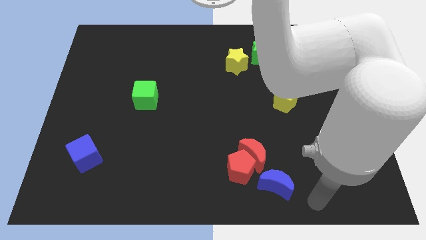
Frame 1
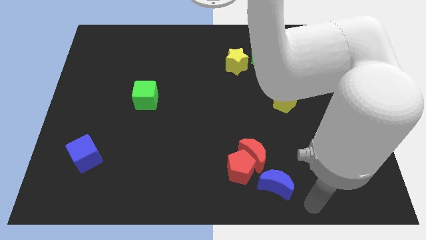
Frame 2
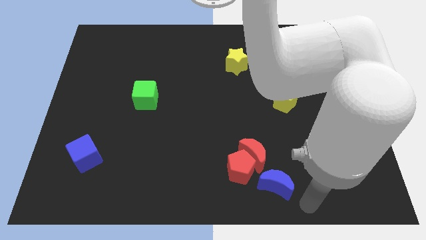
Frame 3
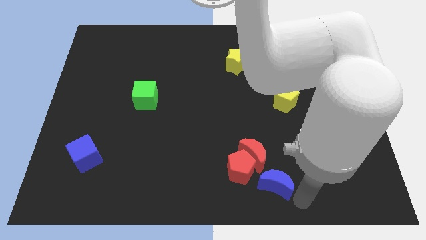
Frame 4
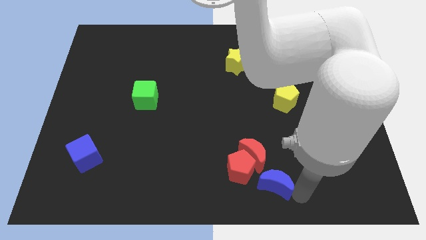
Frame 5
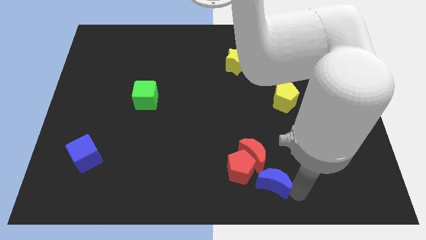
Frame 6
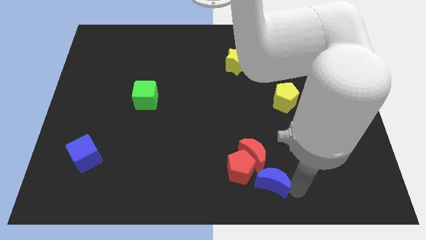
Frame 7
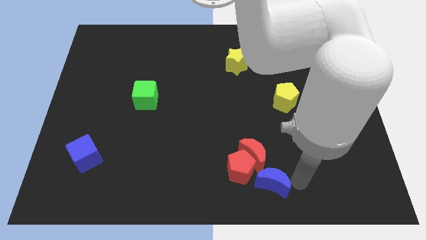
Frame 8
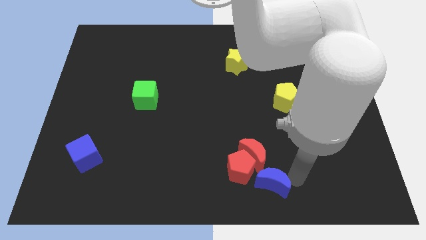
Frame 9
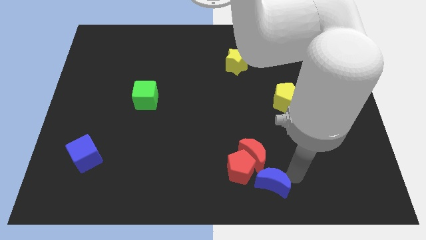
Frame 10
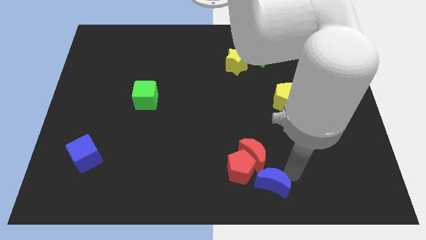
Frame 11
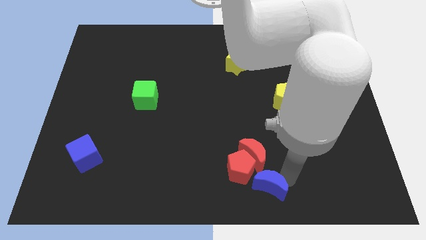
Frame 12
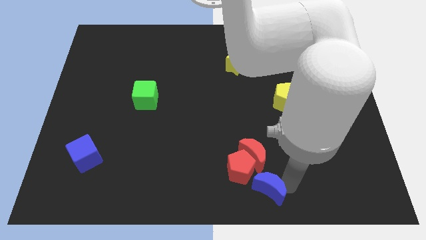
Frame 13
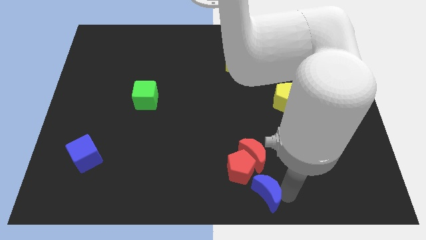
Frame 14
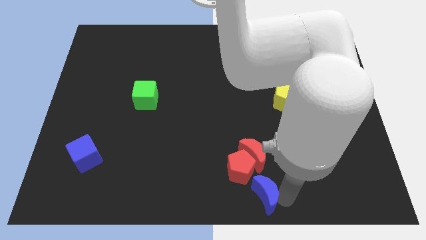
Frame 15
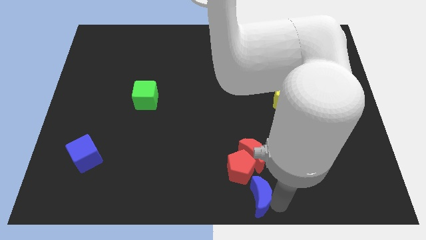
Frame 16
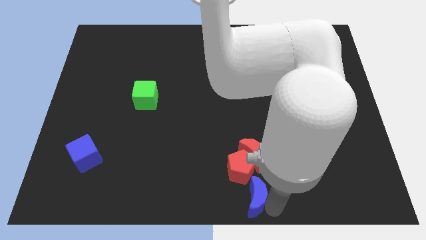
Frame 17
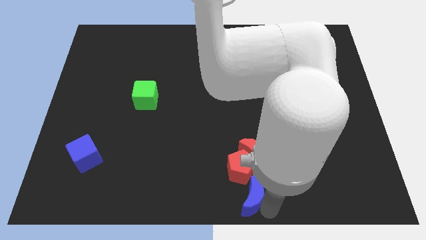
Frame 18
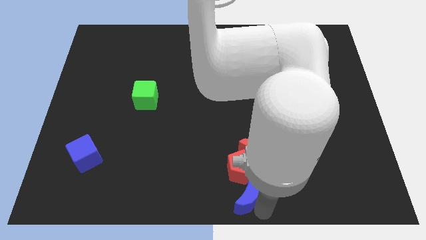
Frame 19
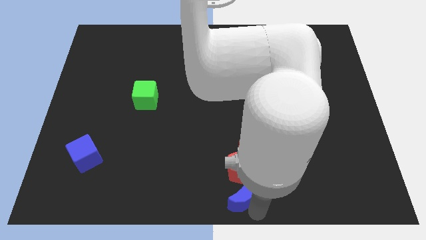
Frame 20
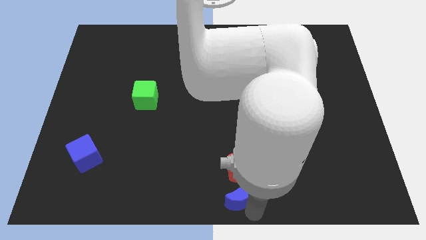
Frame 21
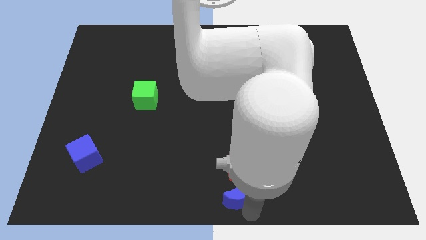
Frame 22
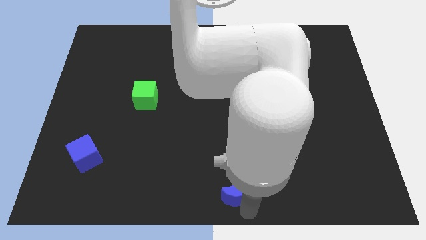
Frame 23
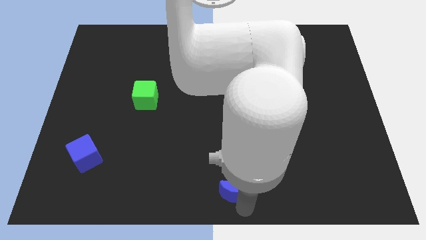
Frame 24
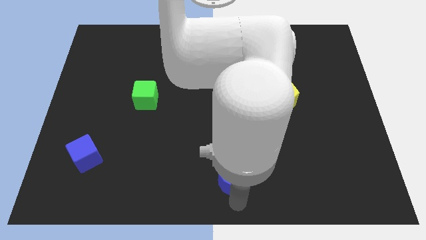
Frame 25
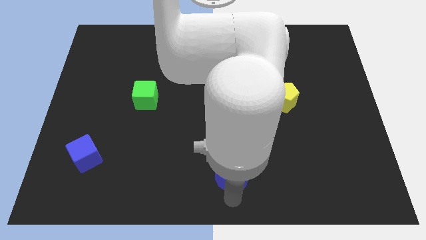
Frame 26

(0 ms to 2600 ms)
place the blue moon below to the red pentagon

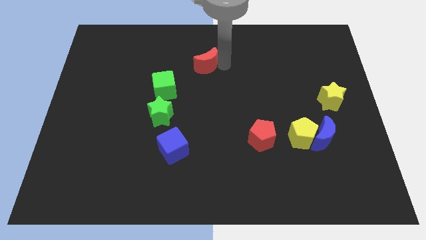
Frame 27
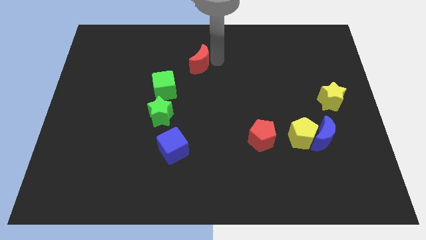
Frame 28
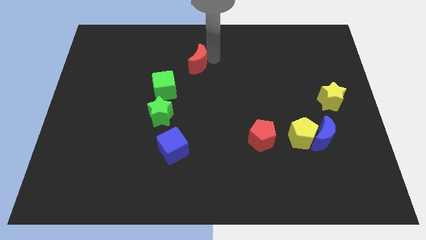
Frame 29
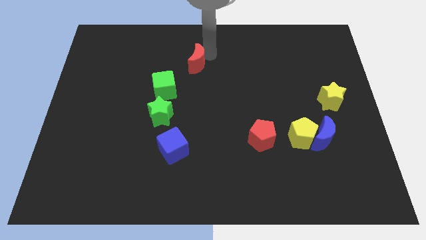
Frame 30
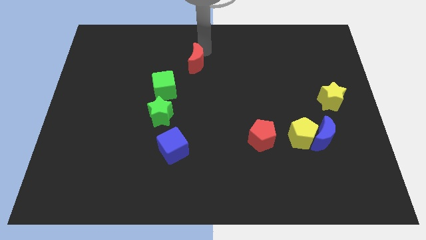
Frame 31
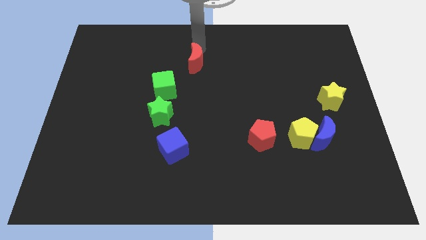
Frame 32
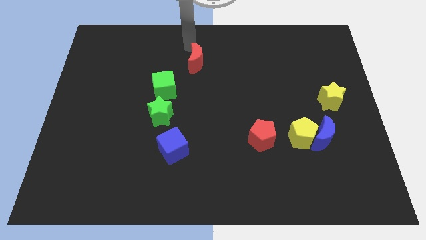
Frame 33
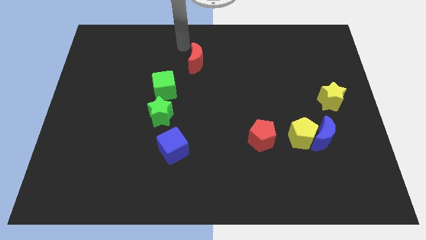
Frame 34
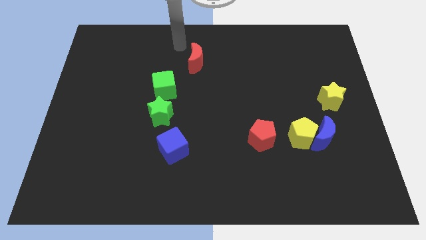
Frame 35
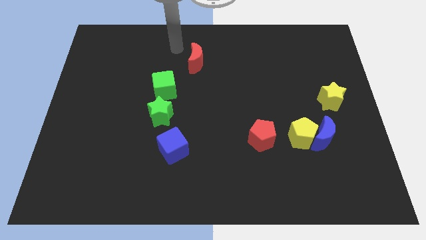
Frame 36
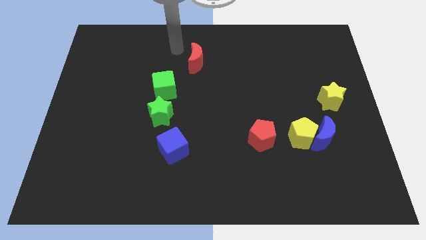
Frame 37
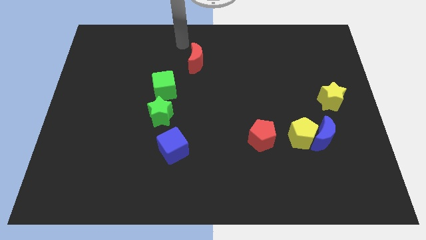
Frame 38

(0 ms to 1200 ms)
place the red crescent diagonally to the top right of the green cube

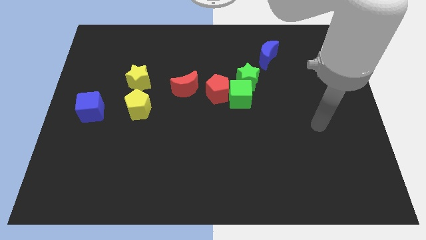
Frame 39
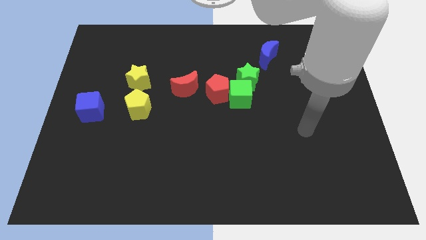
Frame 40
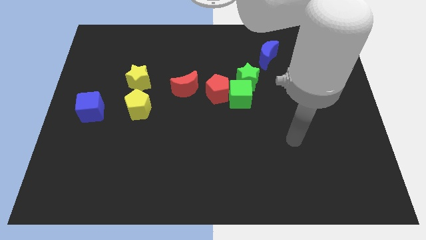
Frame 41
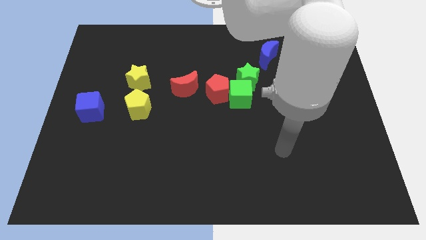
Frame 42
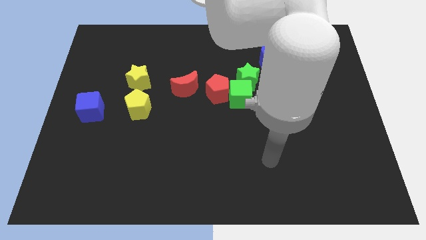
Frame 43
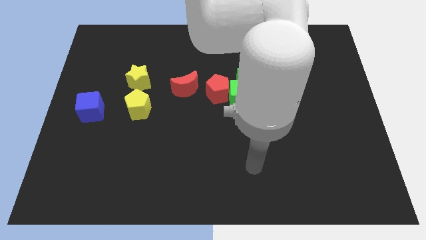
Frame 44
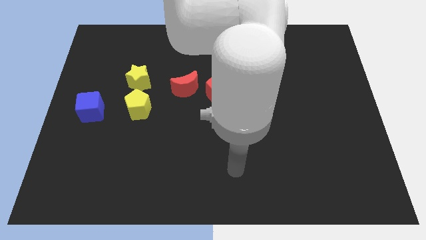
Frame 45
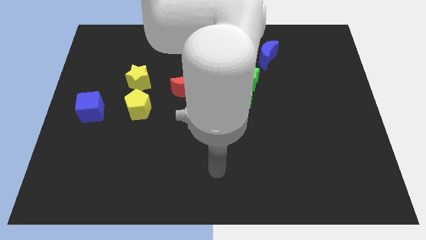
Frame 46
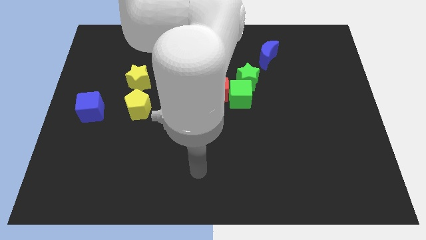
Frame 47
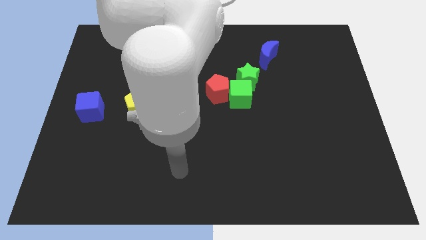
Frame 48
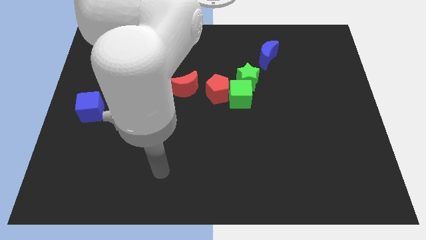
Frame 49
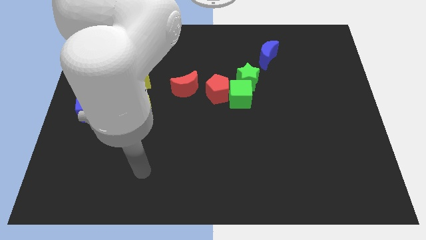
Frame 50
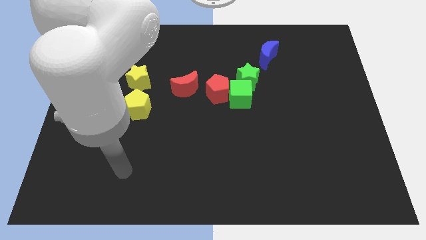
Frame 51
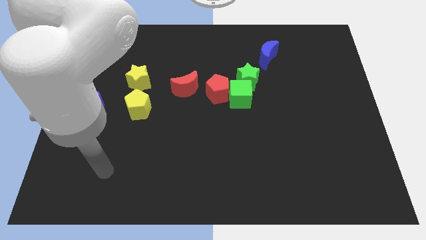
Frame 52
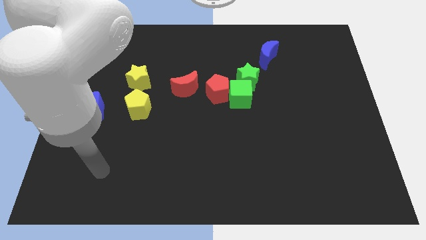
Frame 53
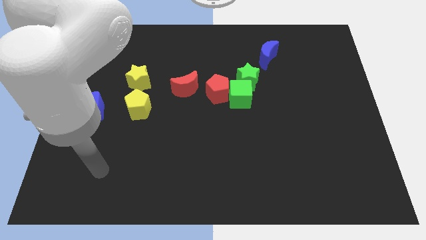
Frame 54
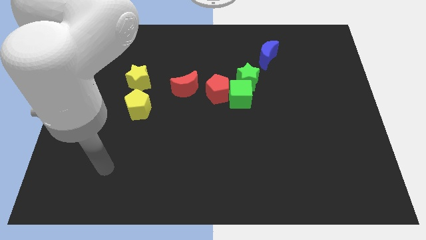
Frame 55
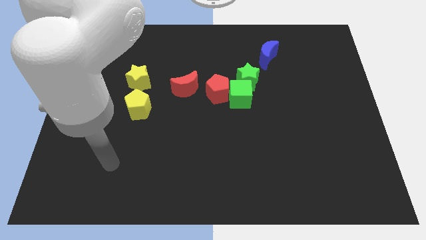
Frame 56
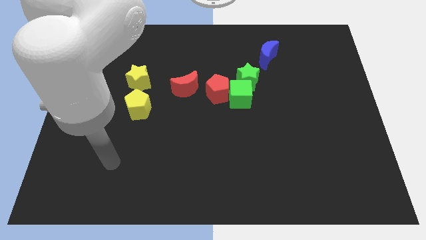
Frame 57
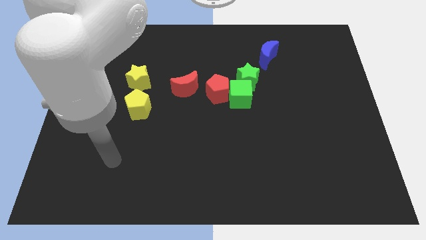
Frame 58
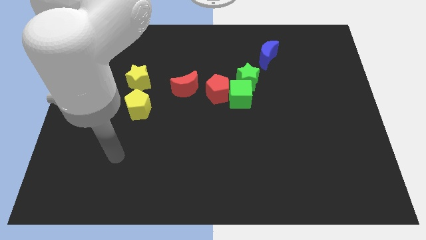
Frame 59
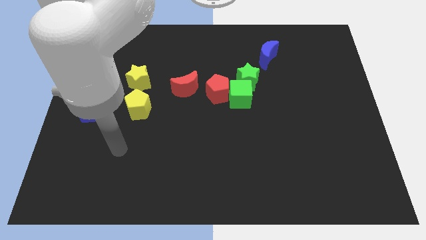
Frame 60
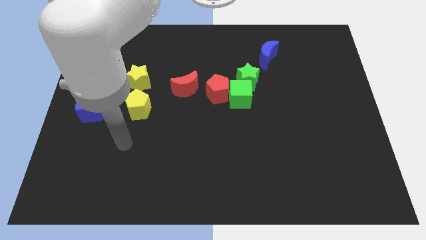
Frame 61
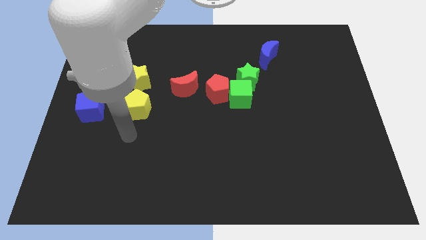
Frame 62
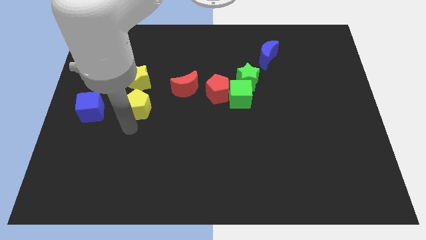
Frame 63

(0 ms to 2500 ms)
move your arm below the yellow pentagon

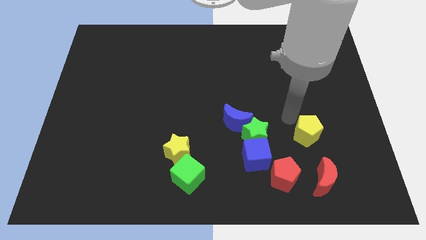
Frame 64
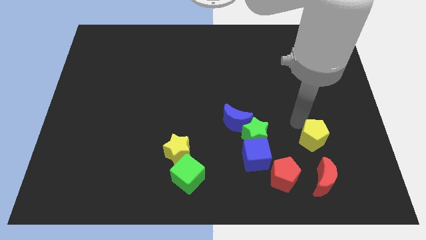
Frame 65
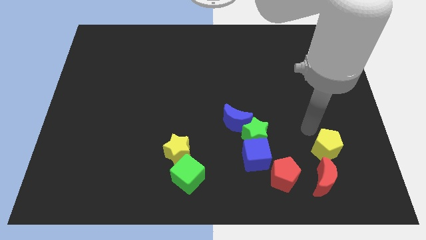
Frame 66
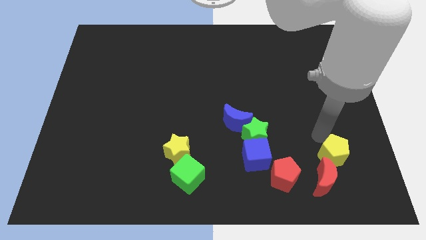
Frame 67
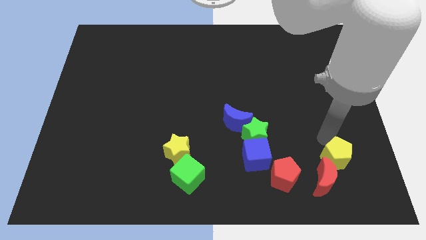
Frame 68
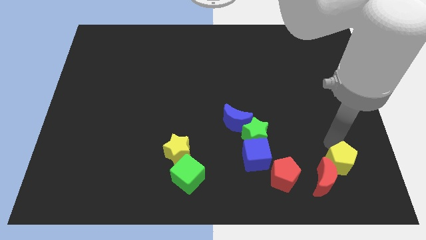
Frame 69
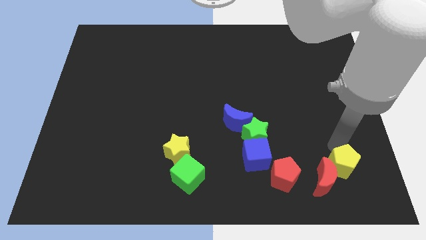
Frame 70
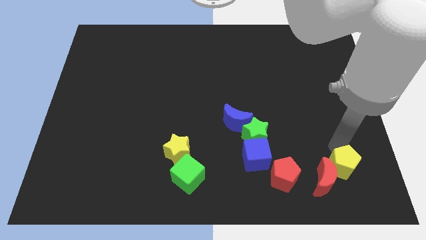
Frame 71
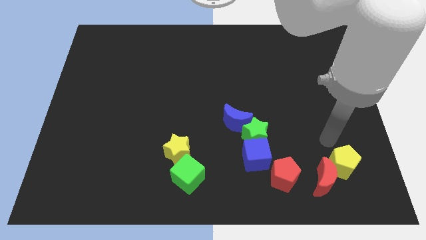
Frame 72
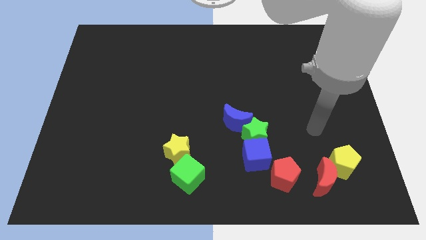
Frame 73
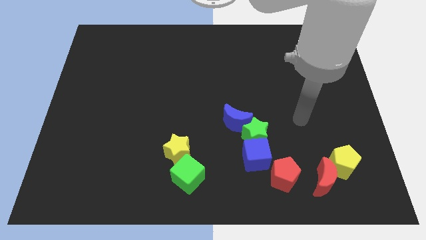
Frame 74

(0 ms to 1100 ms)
move the yellow pentagon close to the red pentagon

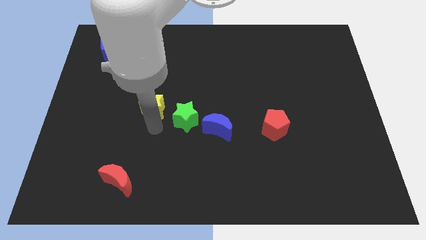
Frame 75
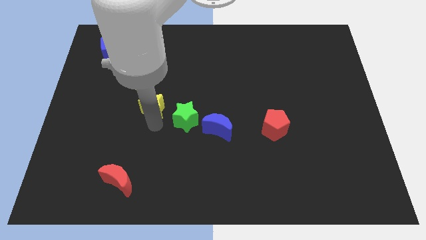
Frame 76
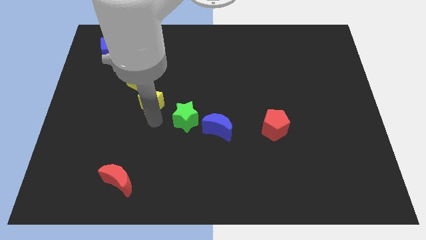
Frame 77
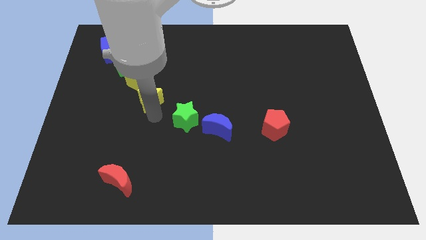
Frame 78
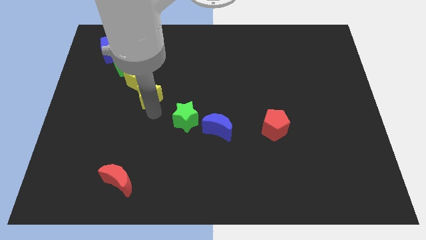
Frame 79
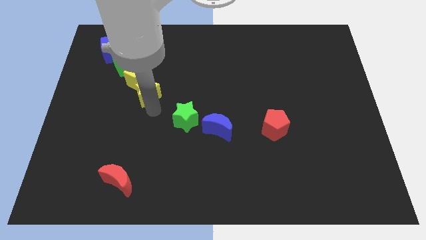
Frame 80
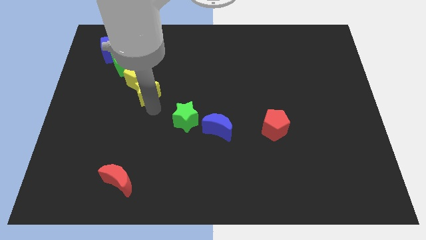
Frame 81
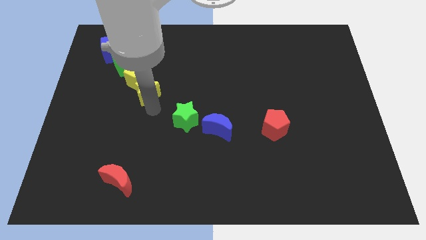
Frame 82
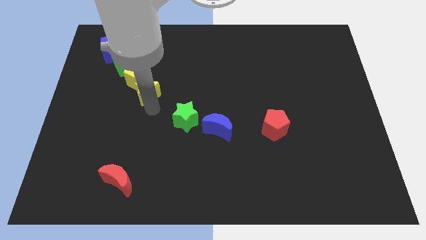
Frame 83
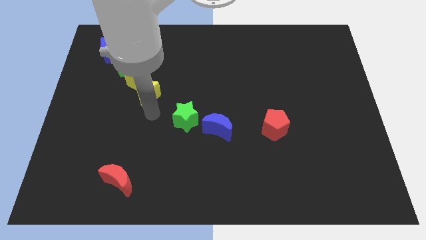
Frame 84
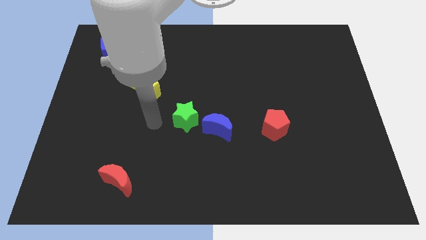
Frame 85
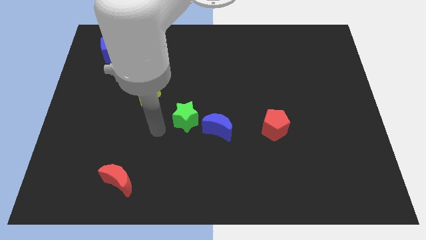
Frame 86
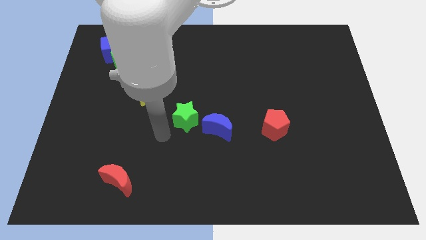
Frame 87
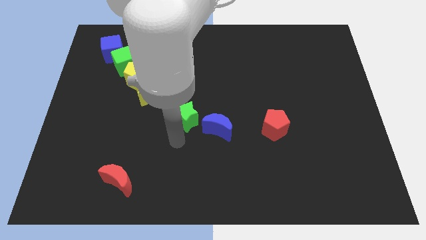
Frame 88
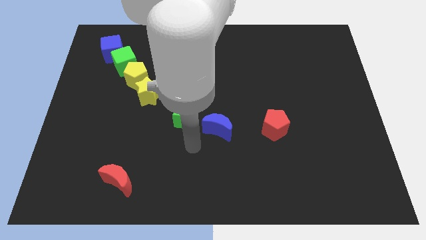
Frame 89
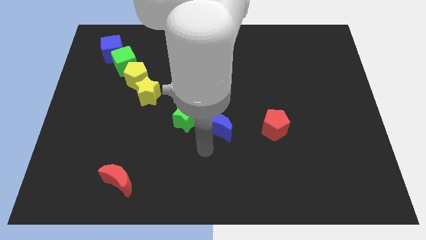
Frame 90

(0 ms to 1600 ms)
move the yellow star below the yellow pentagon
